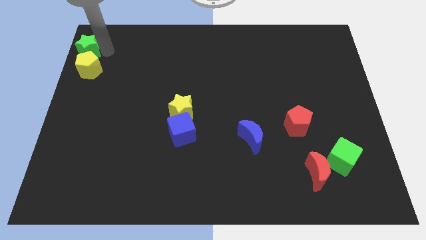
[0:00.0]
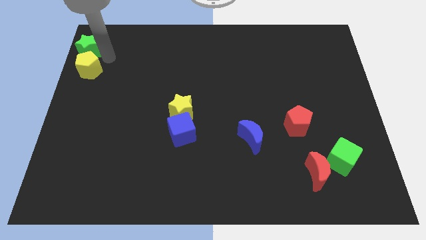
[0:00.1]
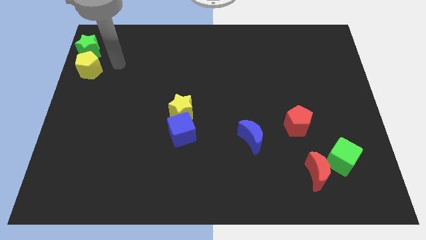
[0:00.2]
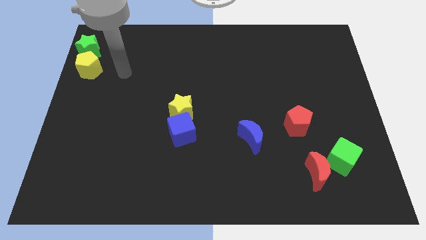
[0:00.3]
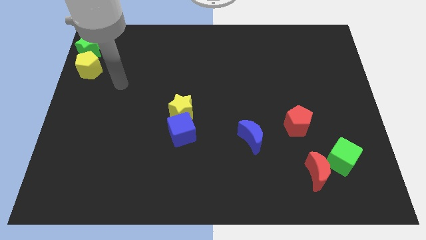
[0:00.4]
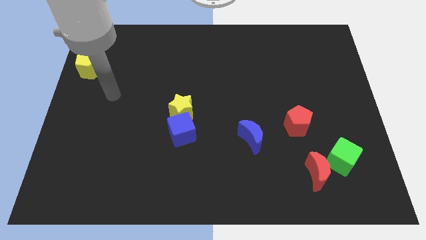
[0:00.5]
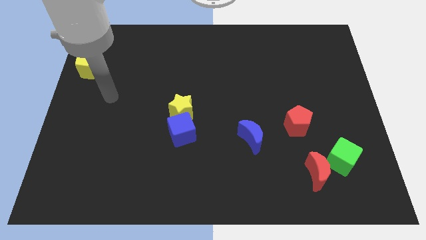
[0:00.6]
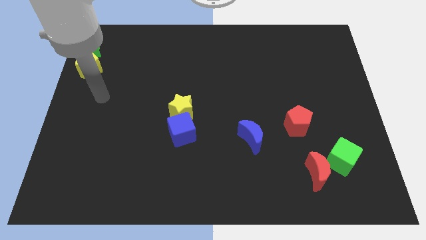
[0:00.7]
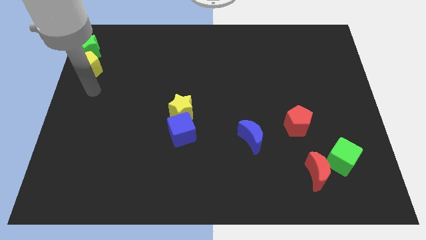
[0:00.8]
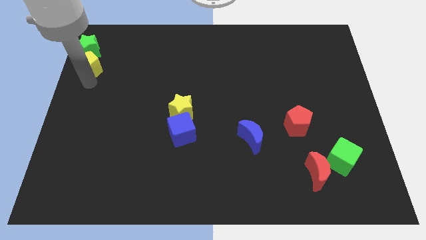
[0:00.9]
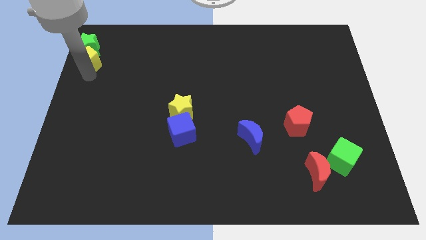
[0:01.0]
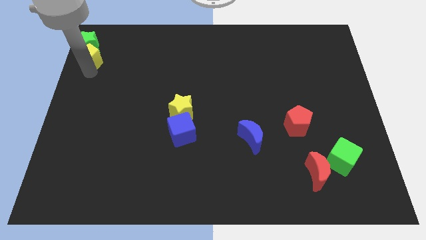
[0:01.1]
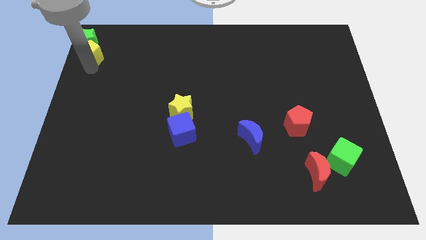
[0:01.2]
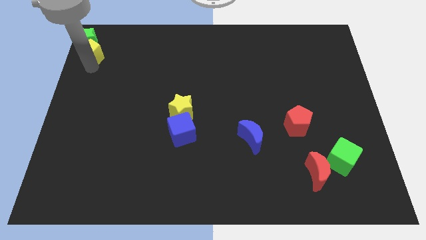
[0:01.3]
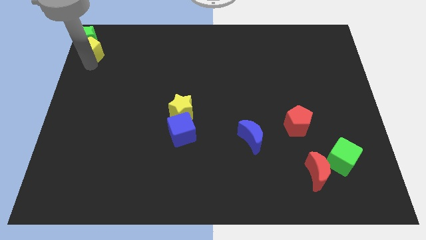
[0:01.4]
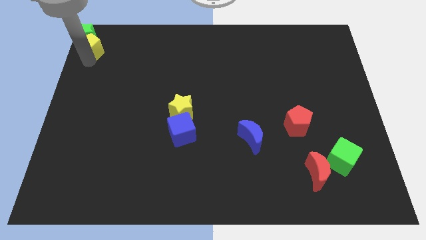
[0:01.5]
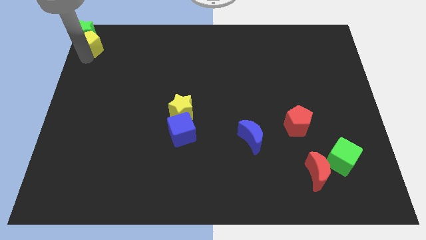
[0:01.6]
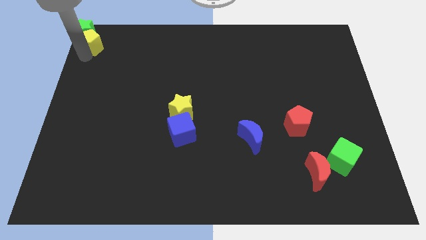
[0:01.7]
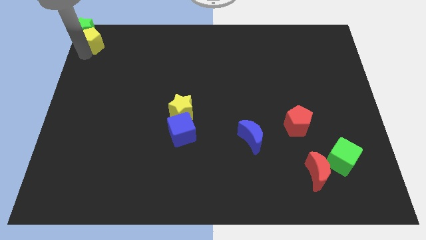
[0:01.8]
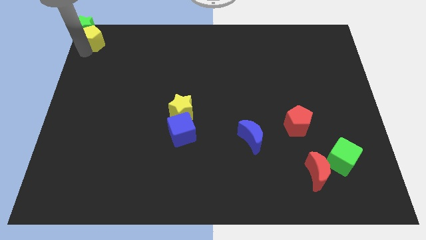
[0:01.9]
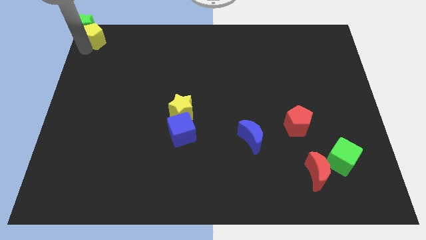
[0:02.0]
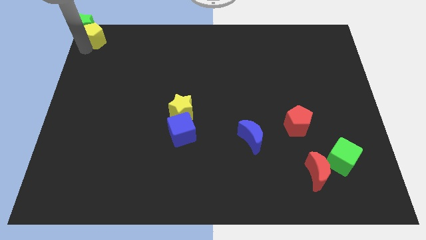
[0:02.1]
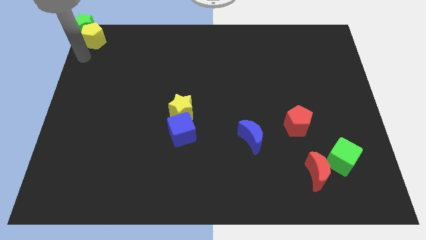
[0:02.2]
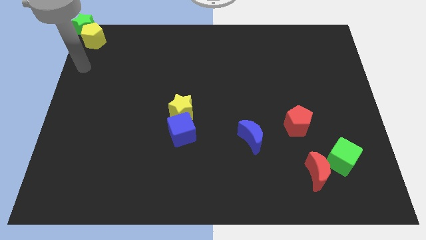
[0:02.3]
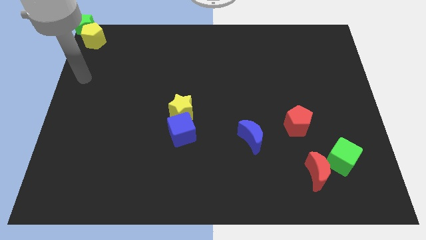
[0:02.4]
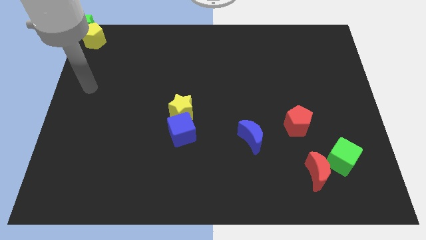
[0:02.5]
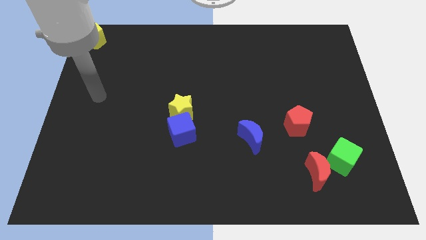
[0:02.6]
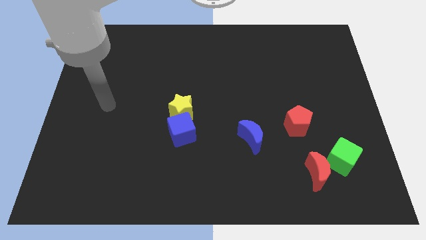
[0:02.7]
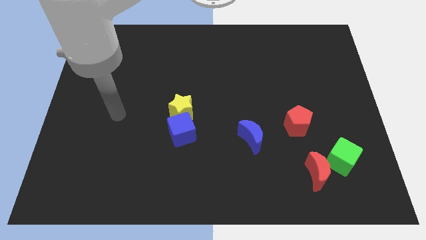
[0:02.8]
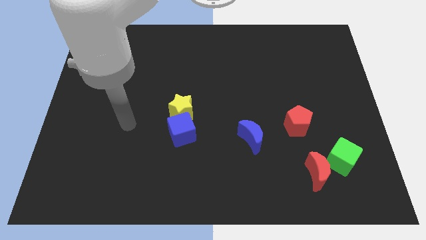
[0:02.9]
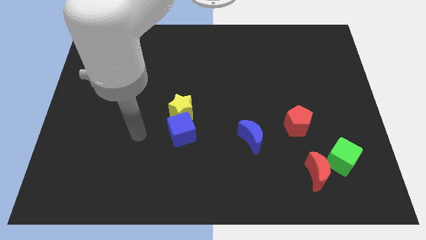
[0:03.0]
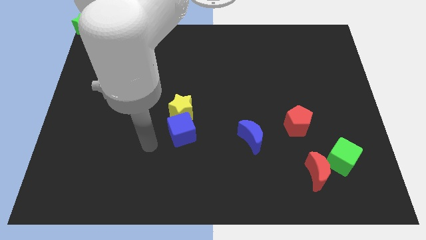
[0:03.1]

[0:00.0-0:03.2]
push green star and yellow pentagon to the top left corner of the board

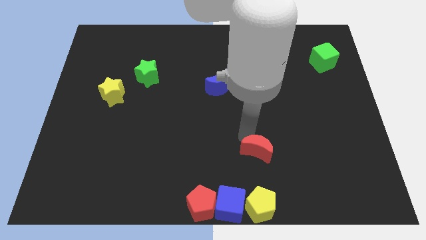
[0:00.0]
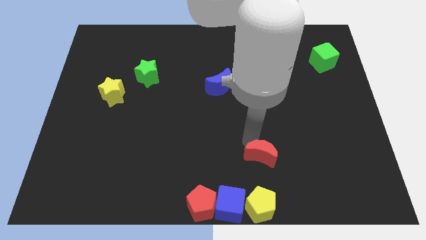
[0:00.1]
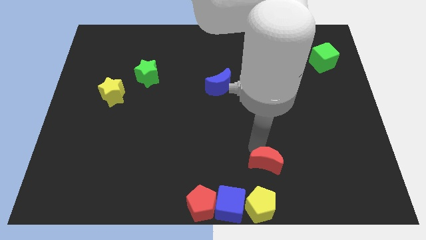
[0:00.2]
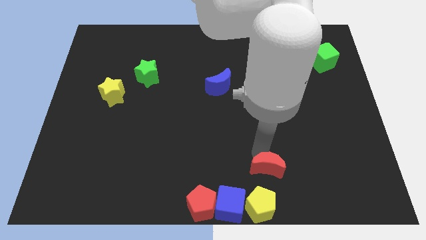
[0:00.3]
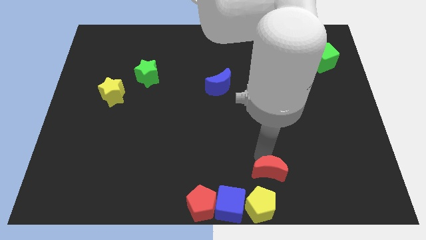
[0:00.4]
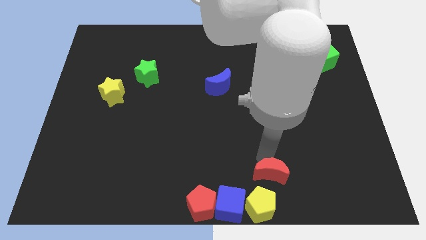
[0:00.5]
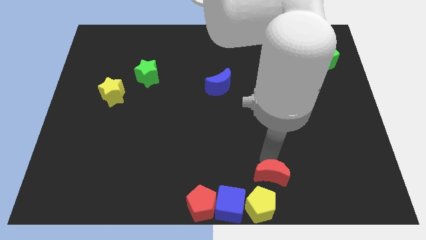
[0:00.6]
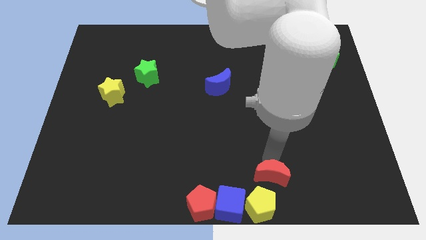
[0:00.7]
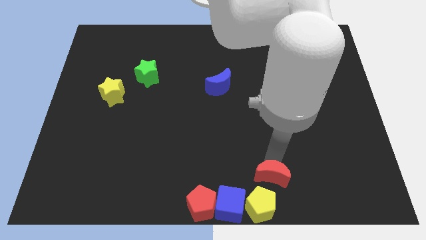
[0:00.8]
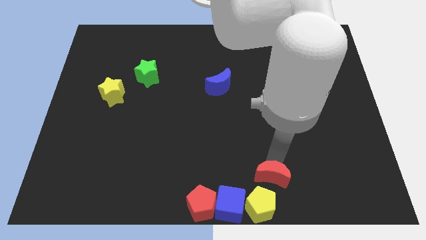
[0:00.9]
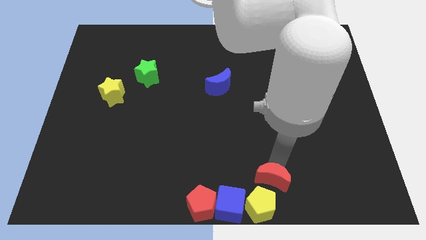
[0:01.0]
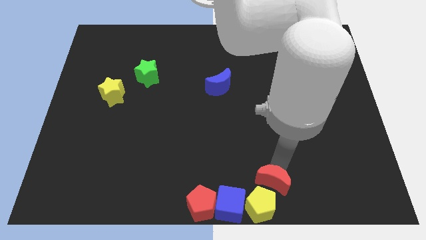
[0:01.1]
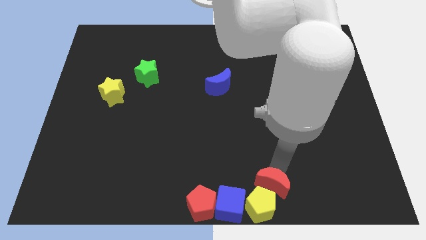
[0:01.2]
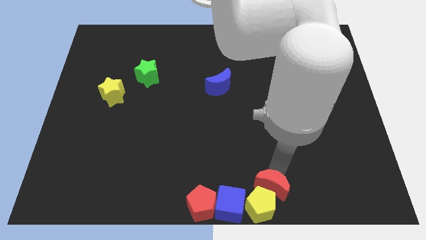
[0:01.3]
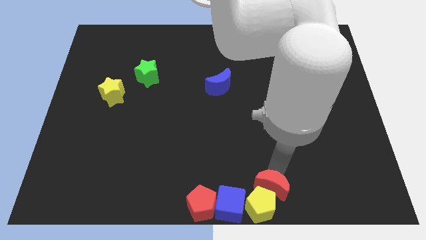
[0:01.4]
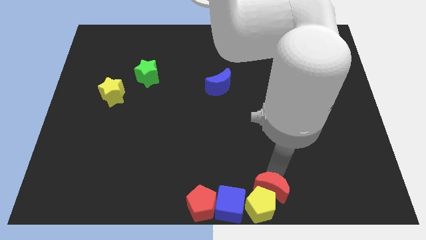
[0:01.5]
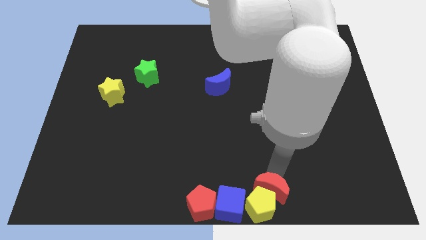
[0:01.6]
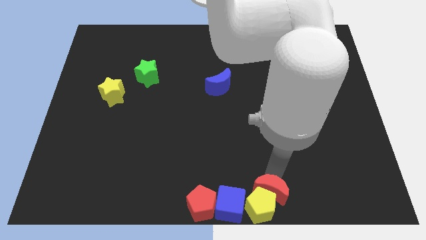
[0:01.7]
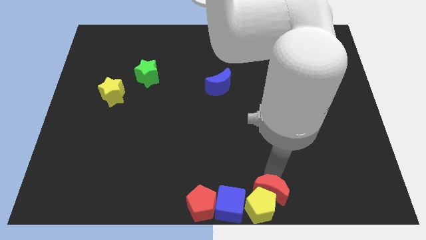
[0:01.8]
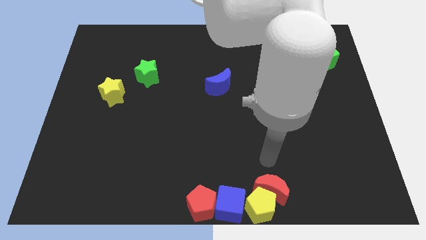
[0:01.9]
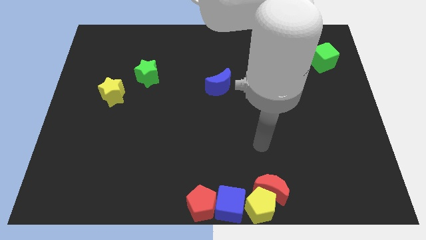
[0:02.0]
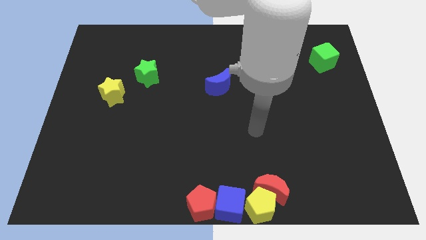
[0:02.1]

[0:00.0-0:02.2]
push the red moon into the yellow pentagon

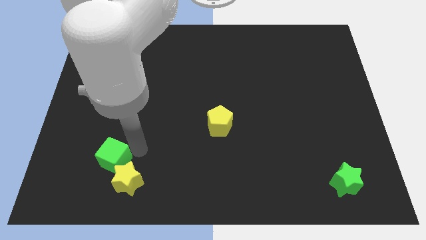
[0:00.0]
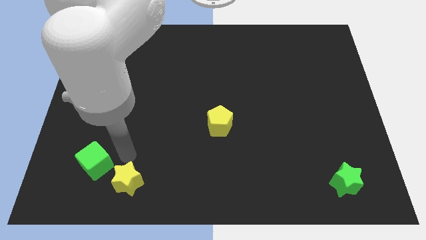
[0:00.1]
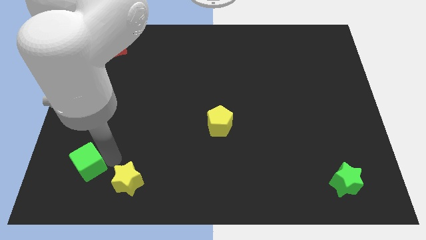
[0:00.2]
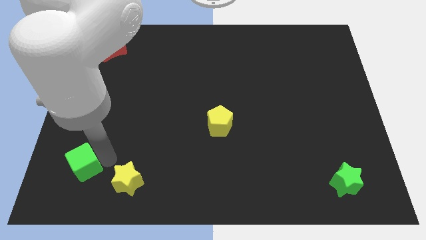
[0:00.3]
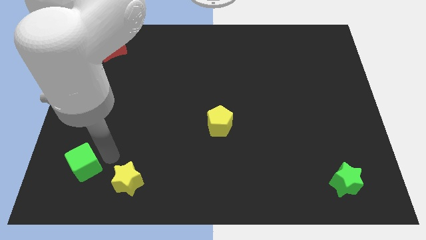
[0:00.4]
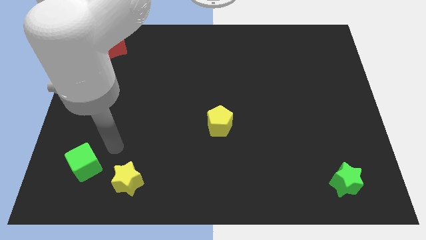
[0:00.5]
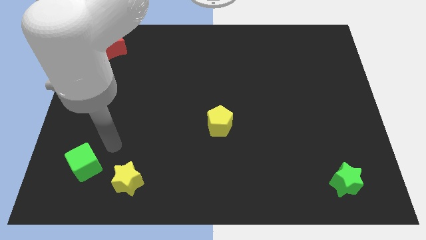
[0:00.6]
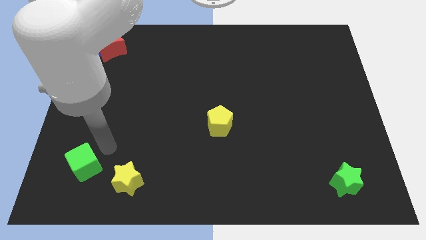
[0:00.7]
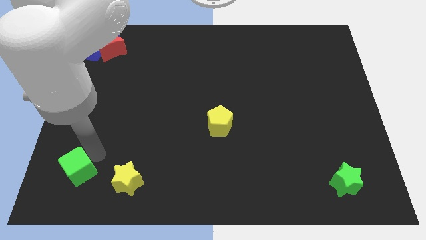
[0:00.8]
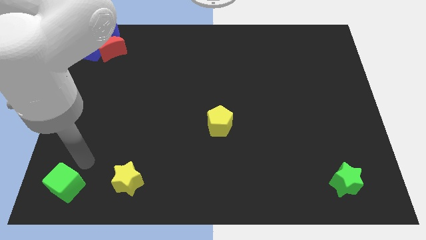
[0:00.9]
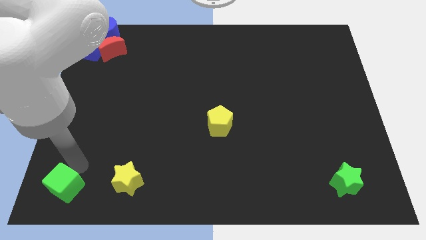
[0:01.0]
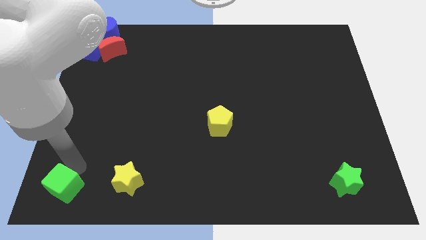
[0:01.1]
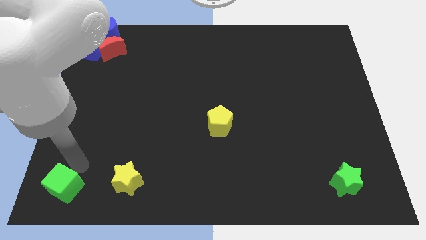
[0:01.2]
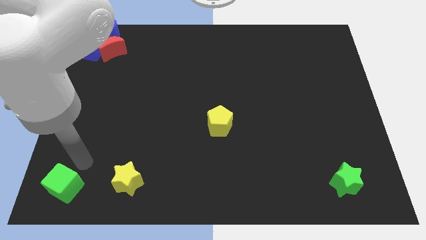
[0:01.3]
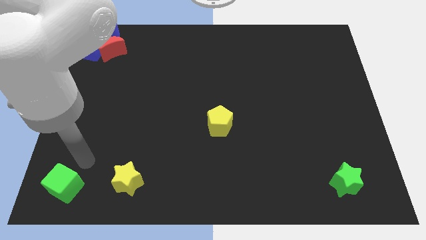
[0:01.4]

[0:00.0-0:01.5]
drag the green cube to the bottom left

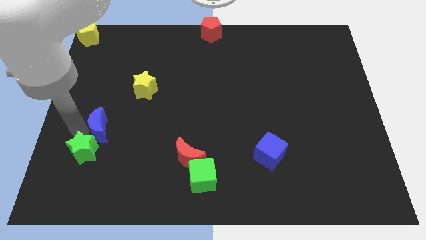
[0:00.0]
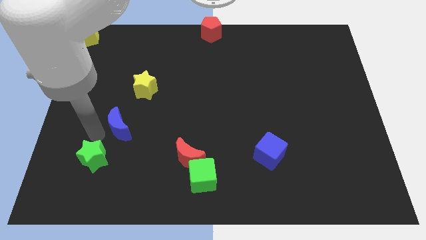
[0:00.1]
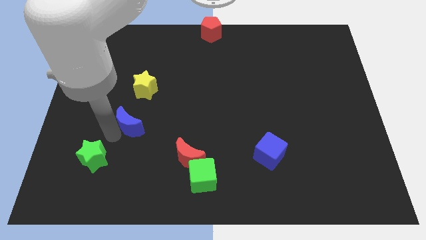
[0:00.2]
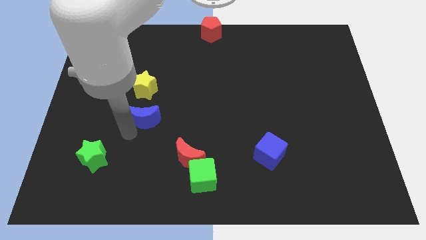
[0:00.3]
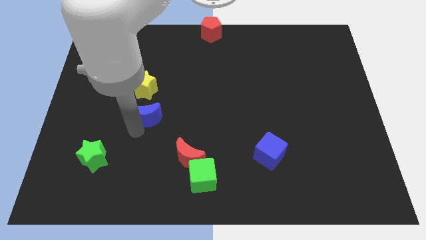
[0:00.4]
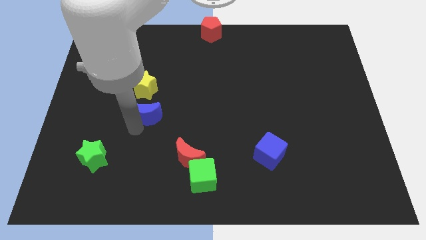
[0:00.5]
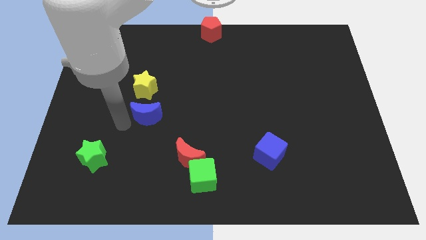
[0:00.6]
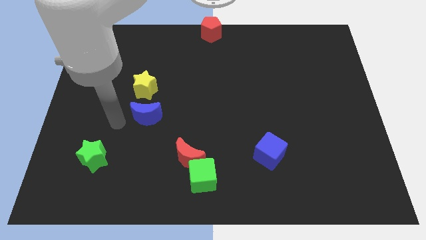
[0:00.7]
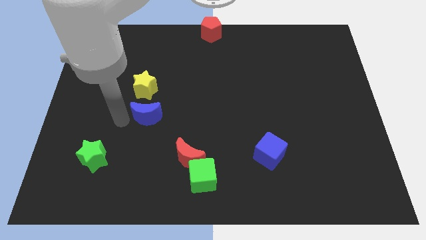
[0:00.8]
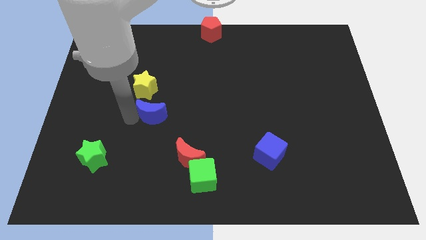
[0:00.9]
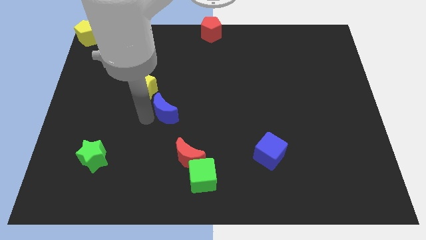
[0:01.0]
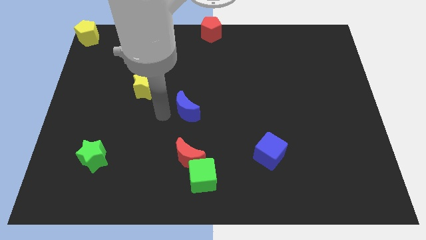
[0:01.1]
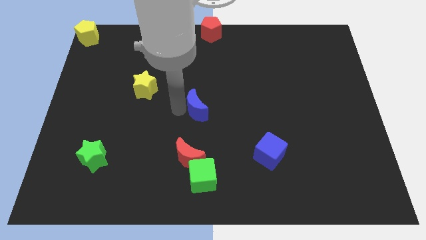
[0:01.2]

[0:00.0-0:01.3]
push the blue crescent to the top of the red crescent

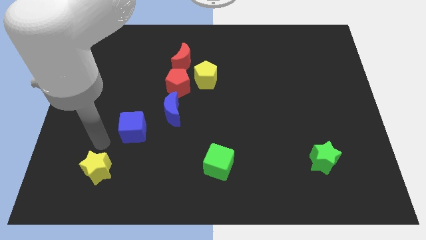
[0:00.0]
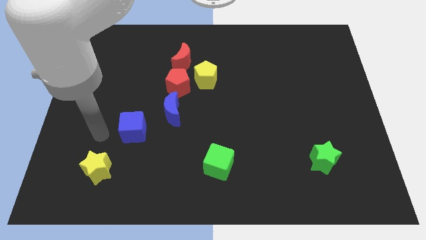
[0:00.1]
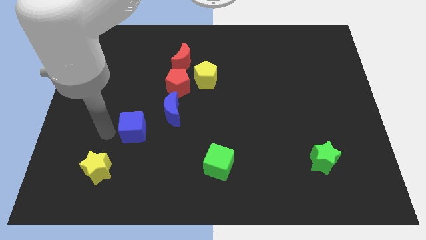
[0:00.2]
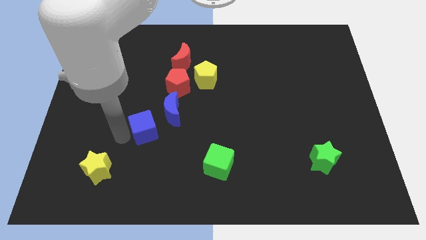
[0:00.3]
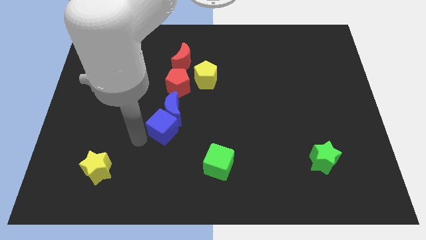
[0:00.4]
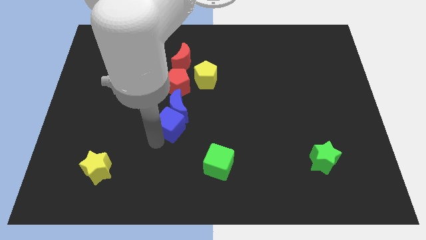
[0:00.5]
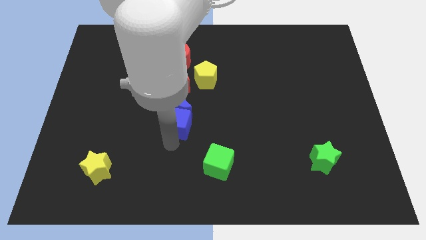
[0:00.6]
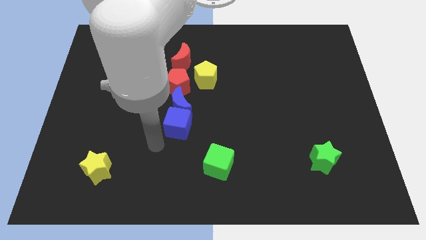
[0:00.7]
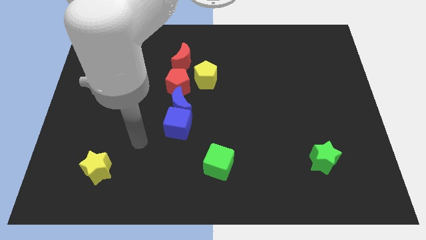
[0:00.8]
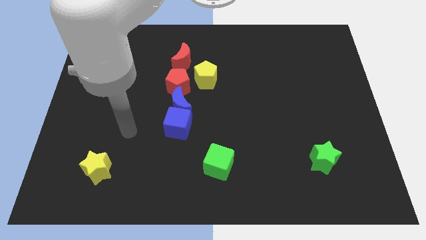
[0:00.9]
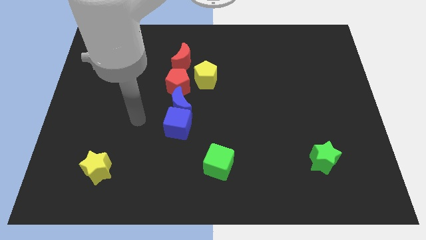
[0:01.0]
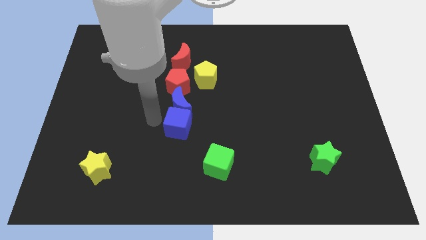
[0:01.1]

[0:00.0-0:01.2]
push the blue cube to the bottom of the blue crescent
